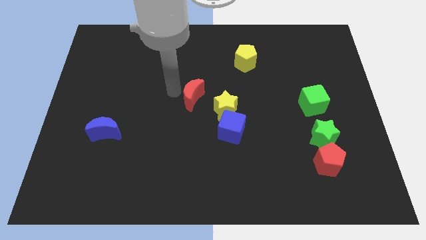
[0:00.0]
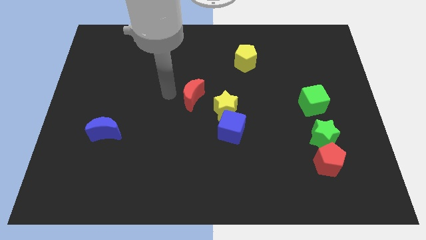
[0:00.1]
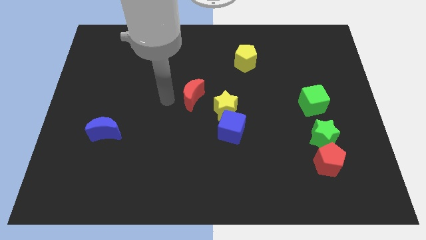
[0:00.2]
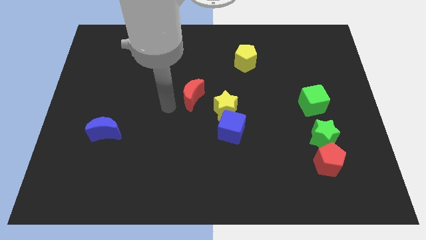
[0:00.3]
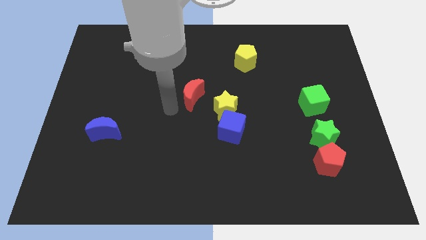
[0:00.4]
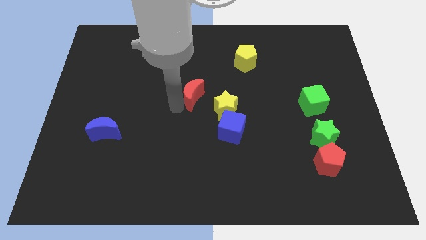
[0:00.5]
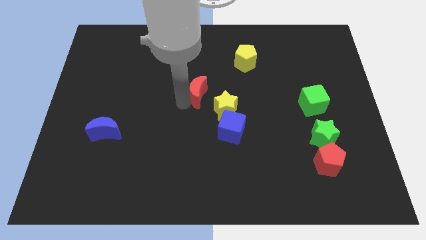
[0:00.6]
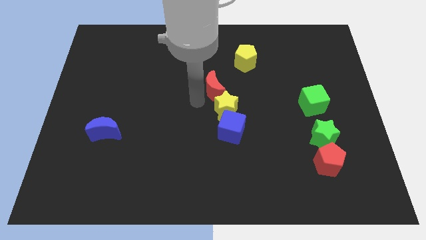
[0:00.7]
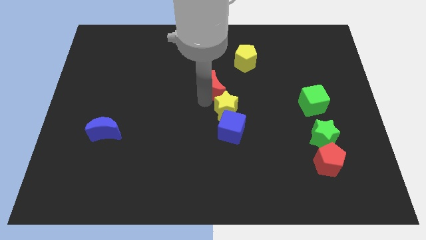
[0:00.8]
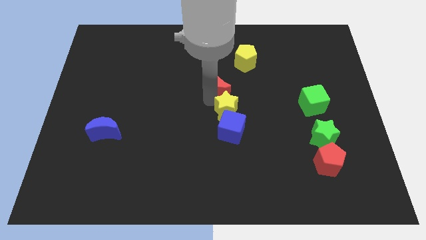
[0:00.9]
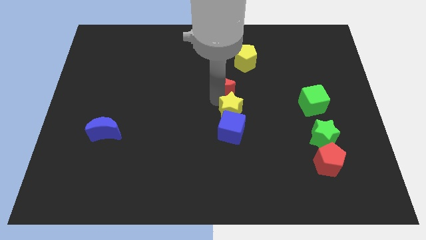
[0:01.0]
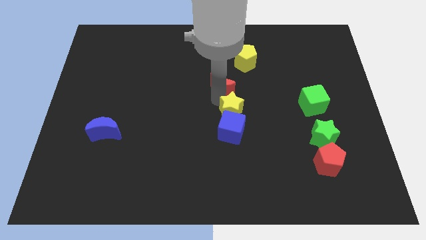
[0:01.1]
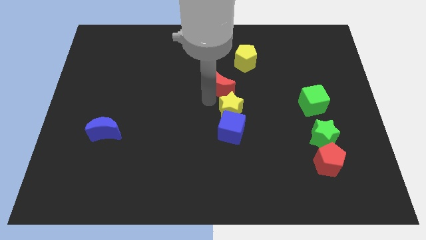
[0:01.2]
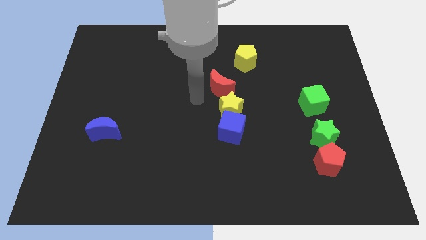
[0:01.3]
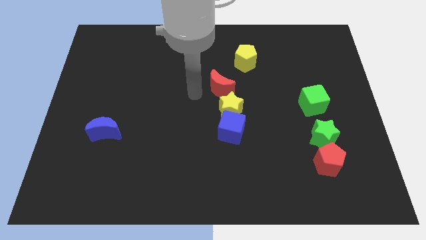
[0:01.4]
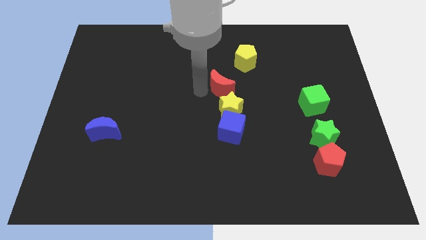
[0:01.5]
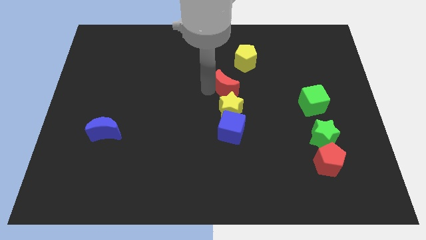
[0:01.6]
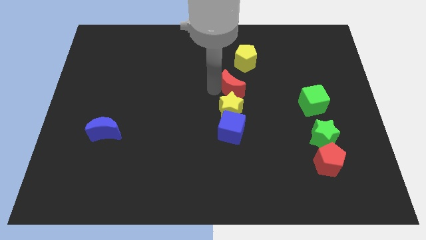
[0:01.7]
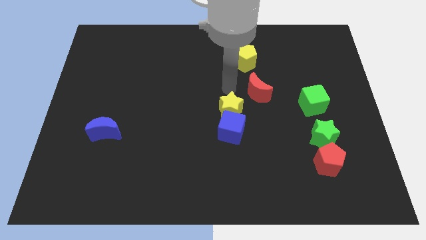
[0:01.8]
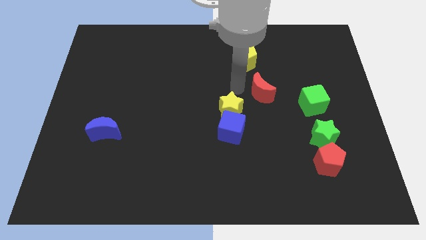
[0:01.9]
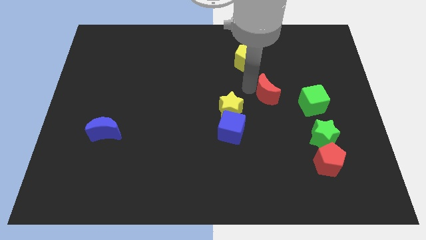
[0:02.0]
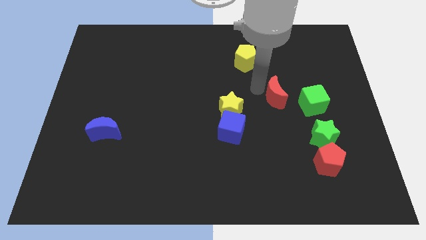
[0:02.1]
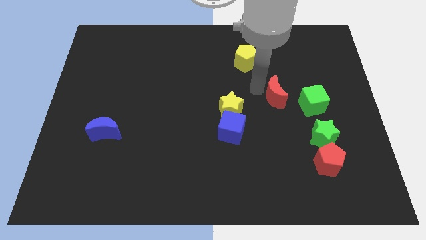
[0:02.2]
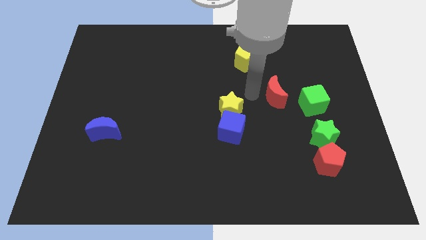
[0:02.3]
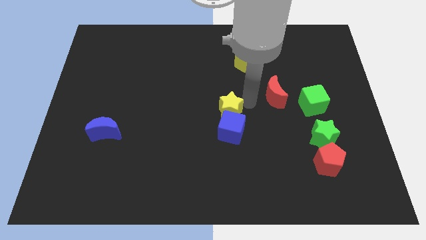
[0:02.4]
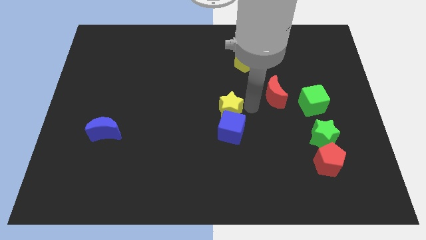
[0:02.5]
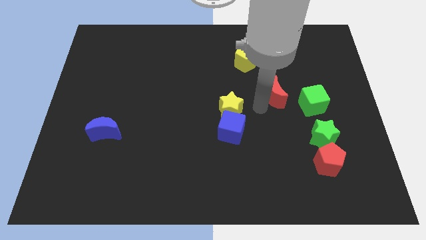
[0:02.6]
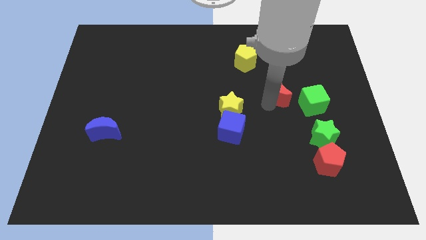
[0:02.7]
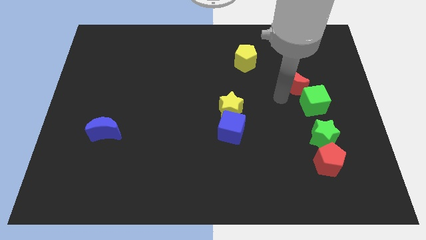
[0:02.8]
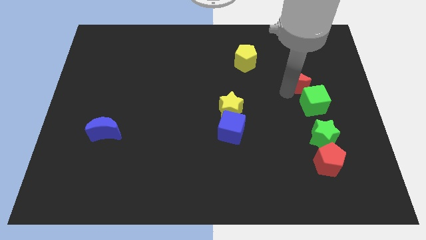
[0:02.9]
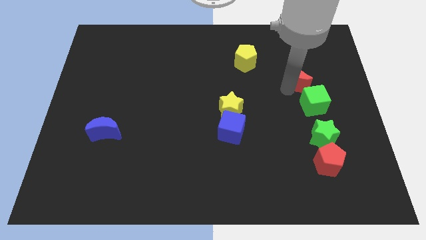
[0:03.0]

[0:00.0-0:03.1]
move the red crescent above the green cube

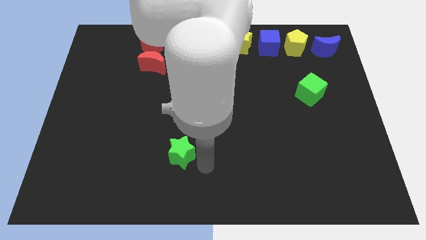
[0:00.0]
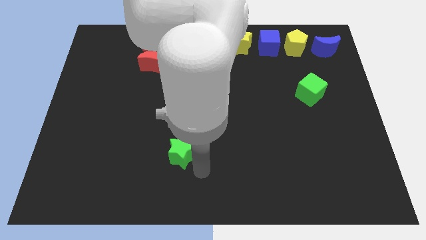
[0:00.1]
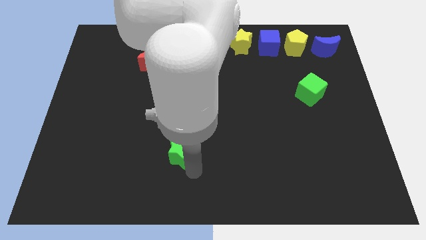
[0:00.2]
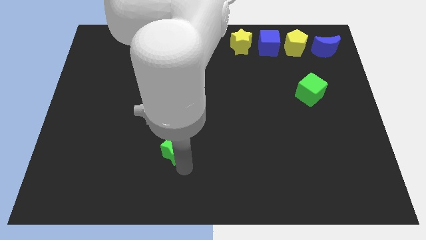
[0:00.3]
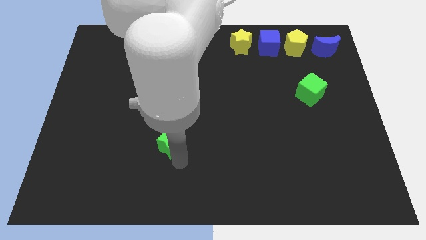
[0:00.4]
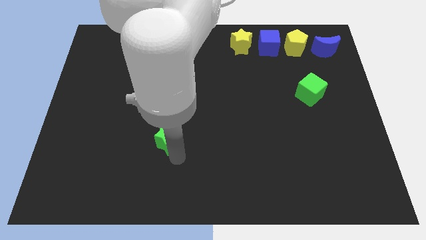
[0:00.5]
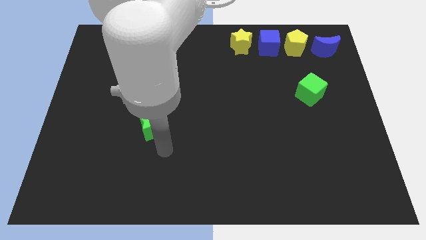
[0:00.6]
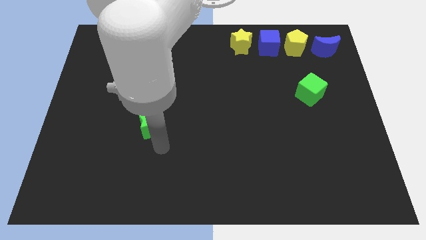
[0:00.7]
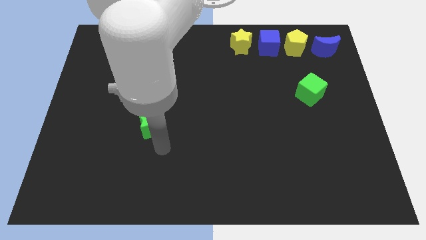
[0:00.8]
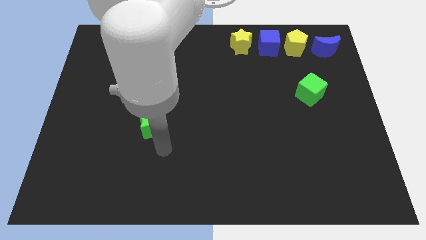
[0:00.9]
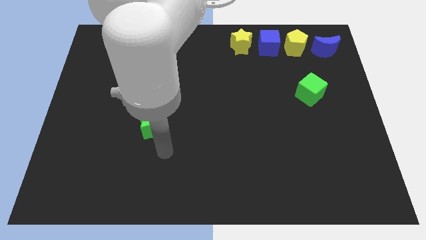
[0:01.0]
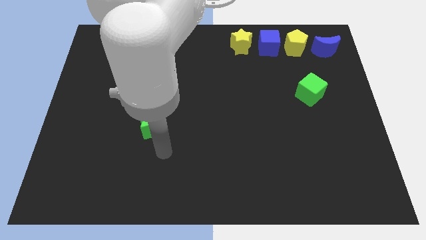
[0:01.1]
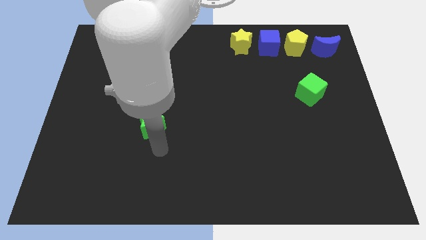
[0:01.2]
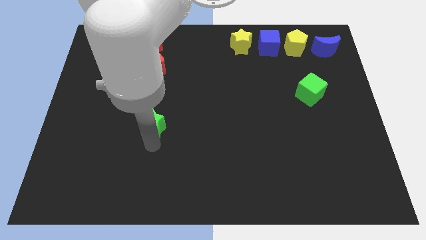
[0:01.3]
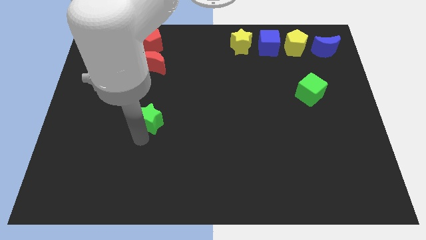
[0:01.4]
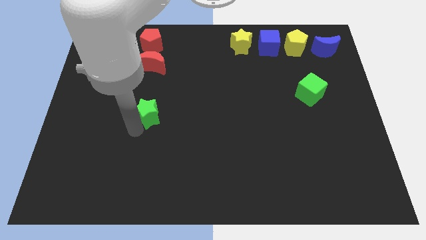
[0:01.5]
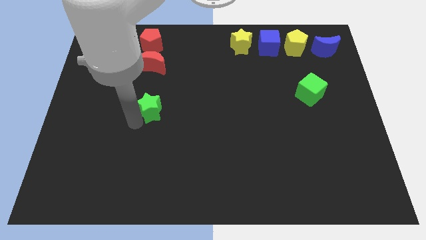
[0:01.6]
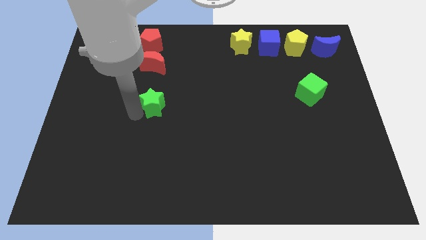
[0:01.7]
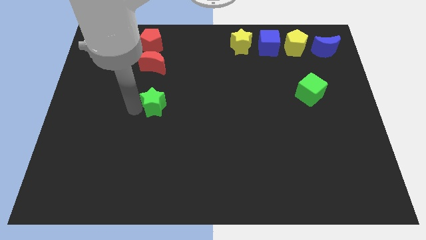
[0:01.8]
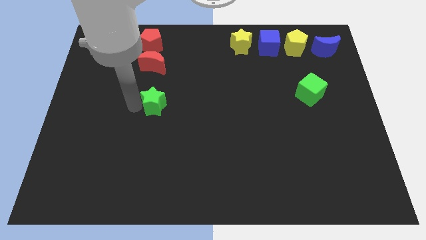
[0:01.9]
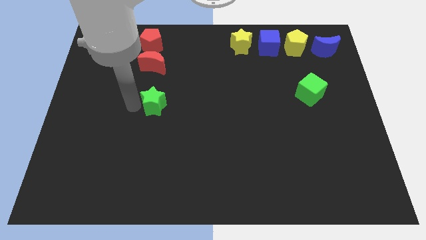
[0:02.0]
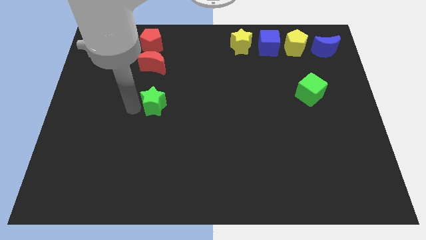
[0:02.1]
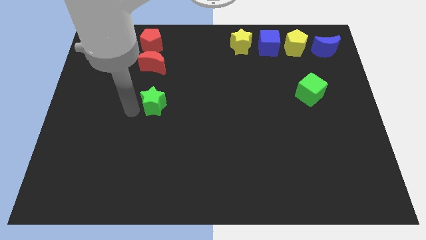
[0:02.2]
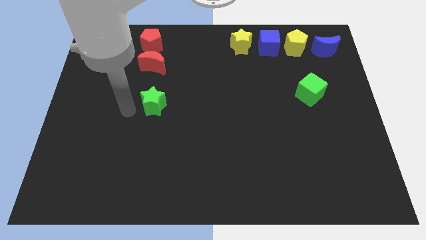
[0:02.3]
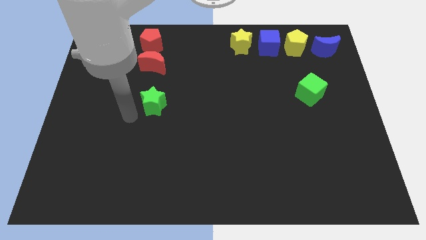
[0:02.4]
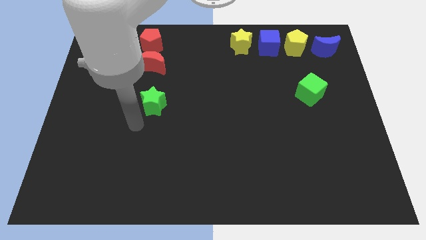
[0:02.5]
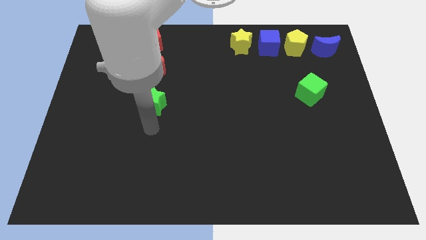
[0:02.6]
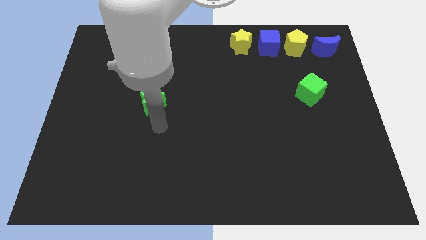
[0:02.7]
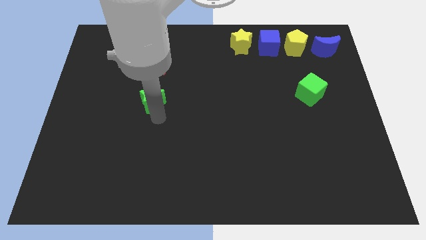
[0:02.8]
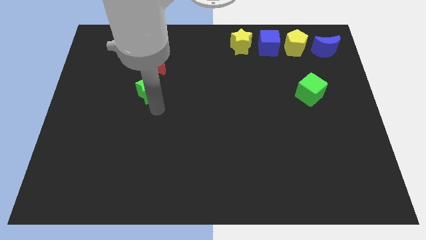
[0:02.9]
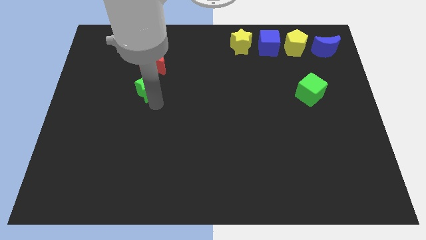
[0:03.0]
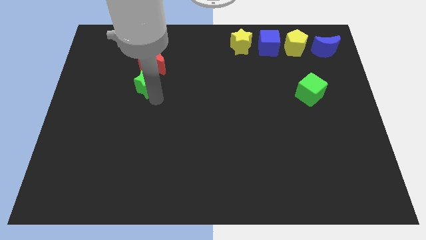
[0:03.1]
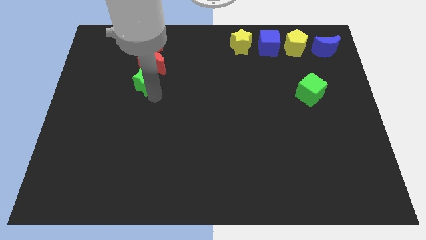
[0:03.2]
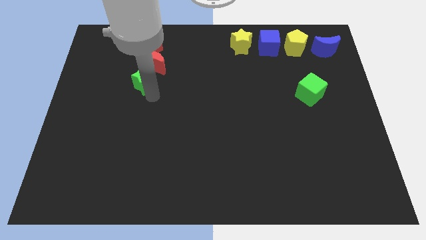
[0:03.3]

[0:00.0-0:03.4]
place the green star vertically below the red crescent

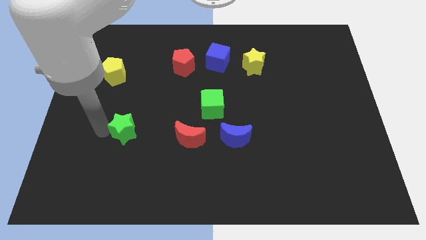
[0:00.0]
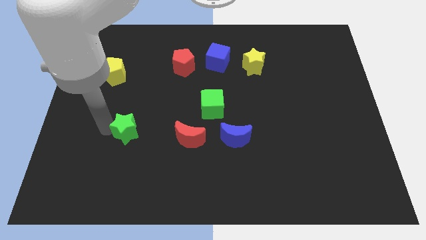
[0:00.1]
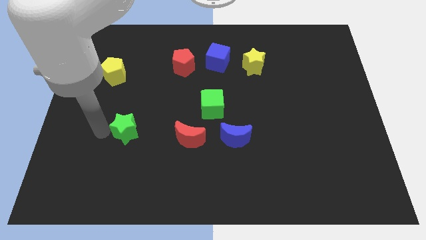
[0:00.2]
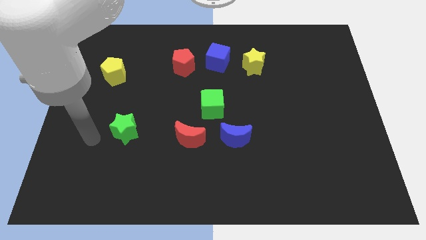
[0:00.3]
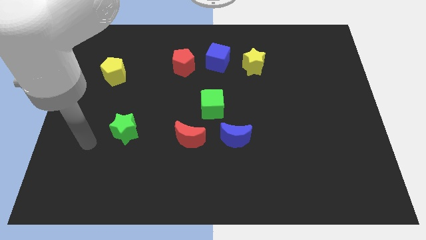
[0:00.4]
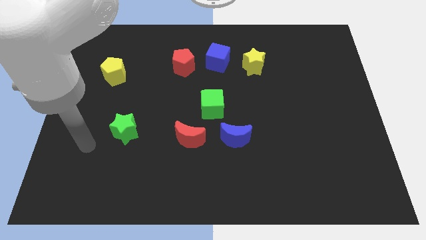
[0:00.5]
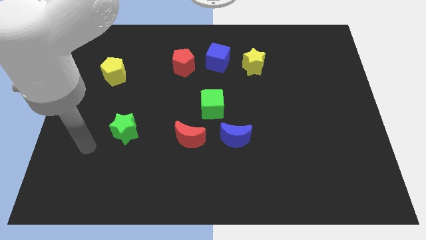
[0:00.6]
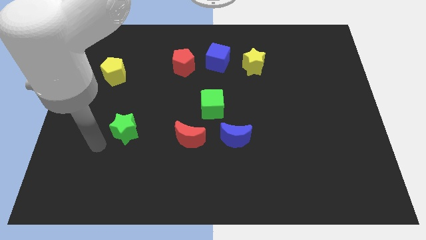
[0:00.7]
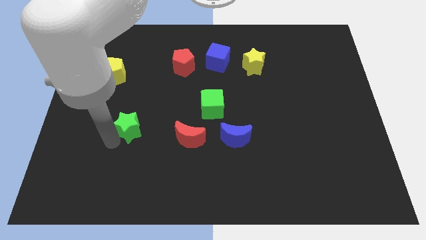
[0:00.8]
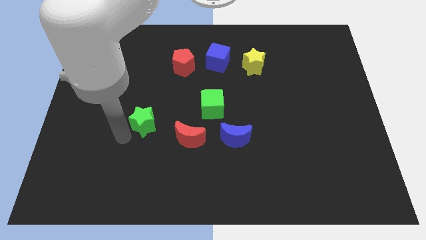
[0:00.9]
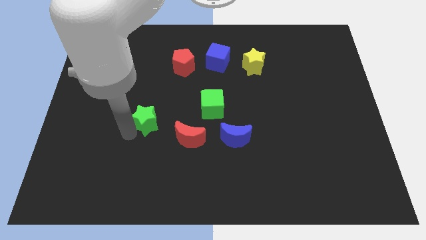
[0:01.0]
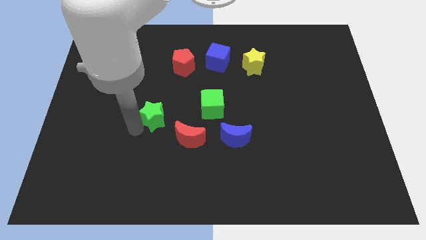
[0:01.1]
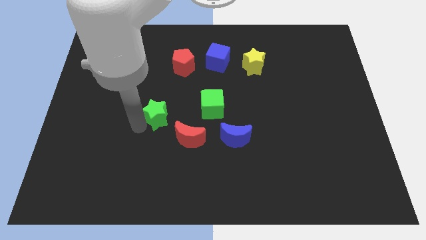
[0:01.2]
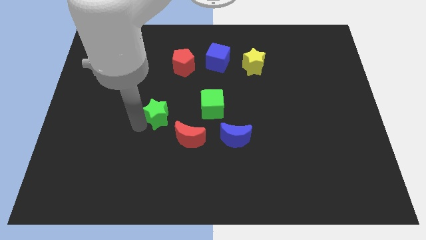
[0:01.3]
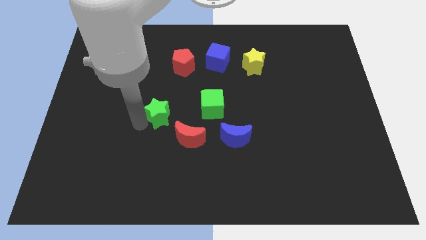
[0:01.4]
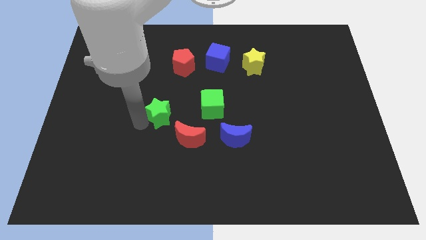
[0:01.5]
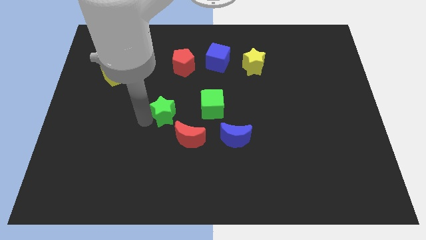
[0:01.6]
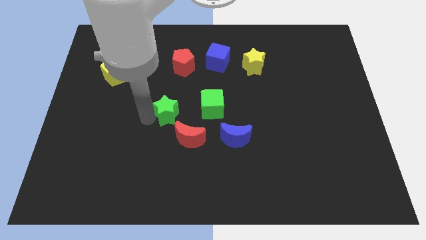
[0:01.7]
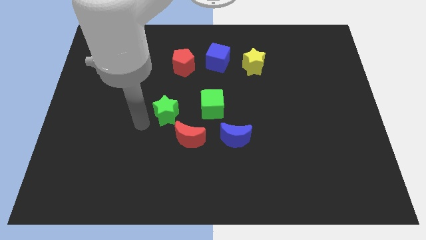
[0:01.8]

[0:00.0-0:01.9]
push green star towards green cube

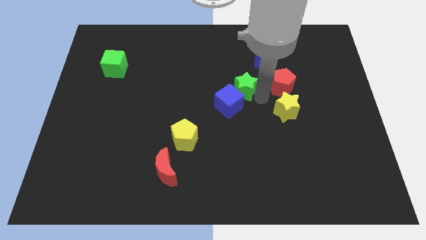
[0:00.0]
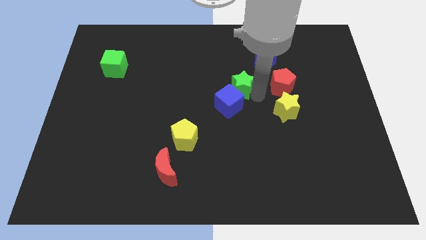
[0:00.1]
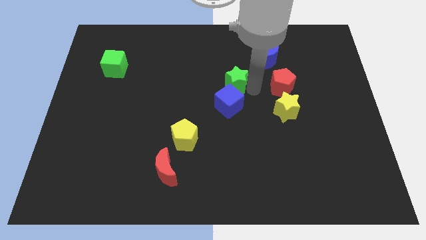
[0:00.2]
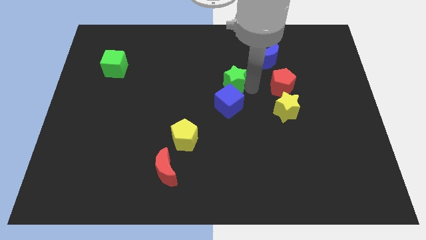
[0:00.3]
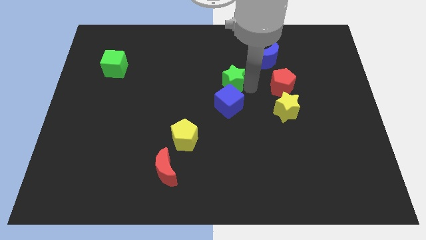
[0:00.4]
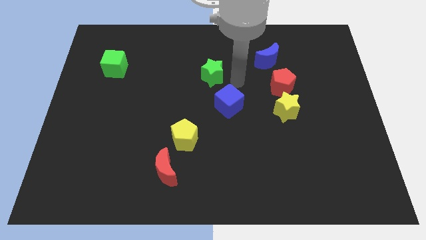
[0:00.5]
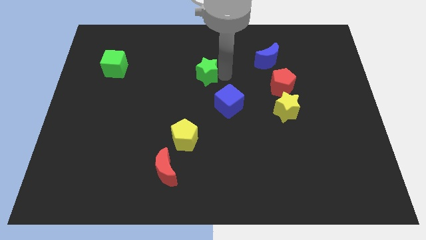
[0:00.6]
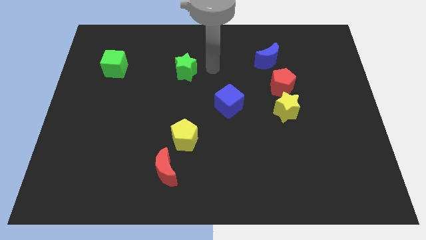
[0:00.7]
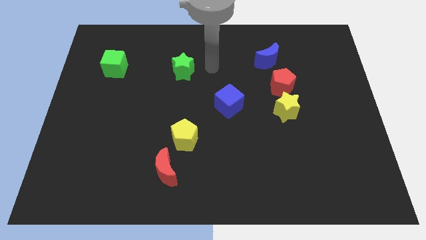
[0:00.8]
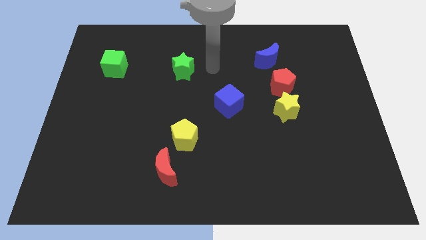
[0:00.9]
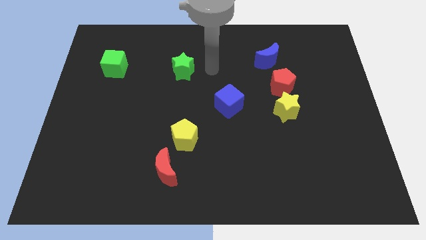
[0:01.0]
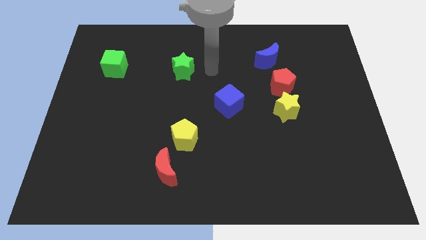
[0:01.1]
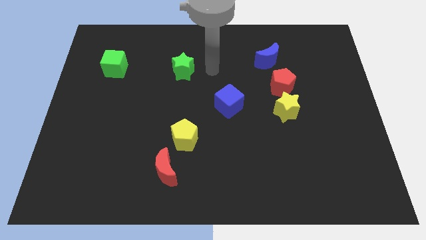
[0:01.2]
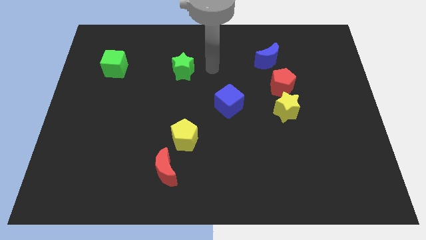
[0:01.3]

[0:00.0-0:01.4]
place the green star parallel to the right side of green cube
